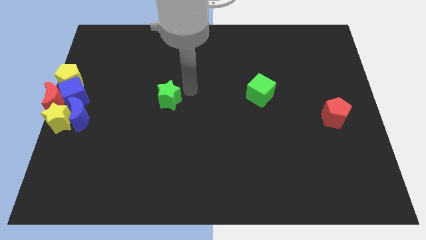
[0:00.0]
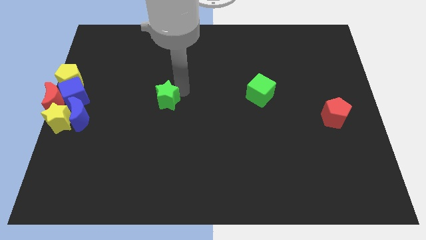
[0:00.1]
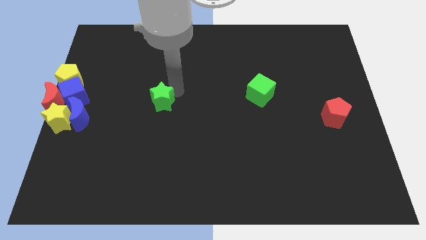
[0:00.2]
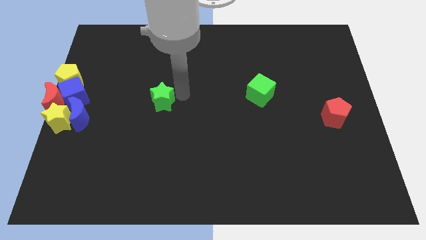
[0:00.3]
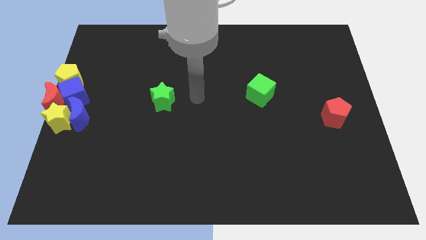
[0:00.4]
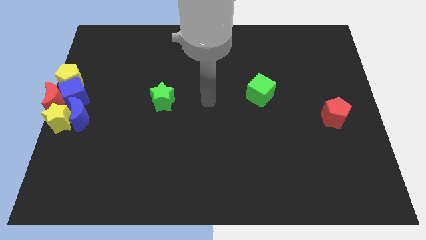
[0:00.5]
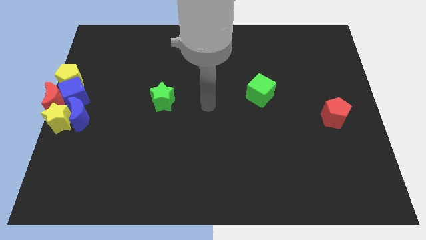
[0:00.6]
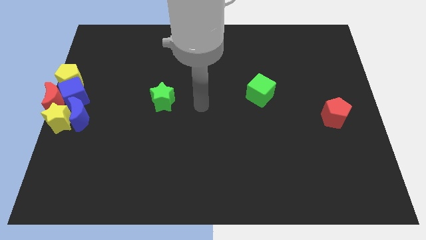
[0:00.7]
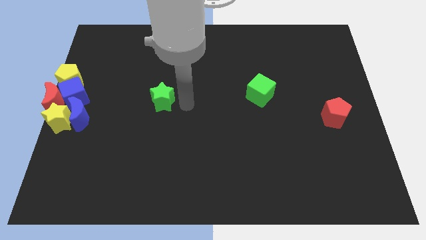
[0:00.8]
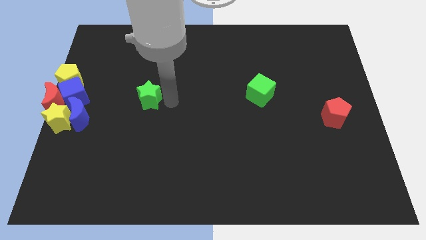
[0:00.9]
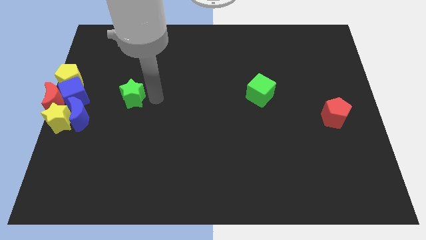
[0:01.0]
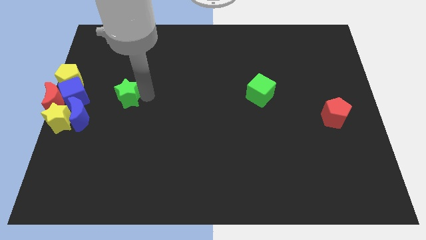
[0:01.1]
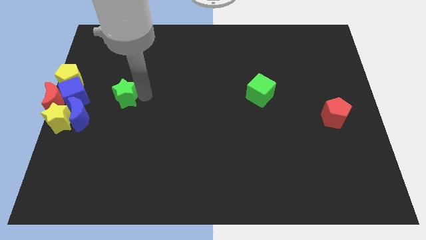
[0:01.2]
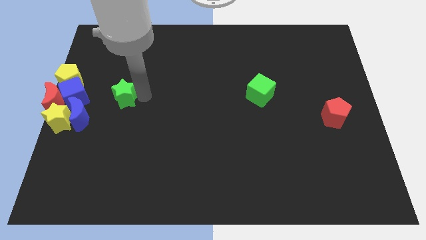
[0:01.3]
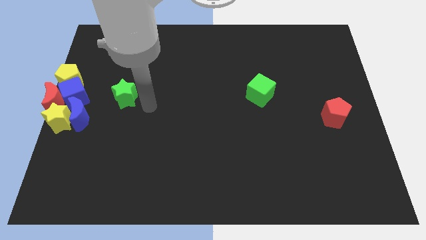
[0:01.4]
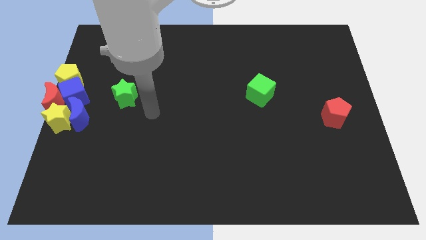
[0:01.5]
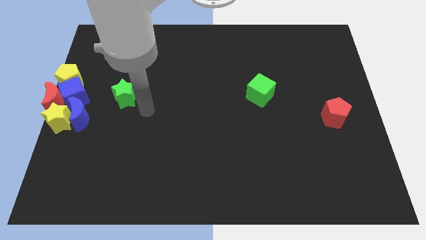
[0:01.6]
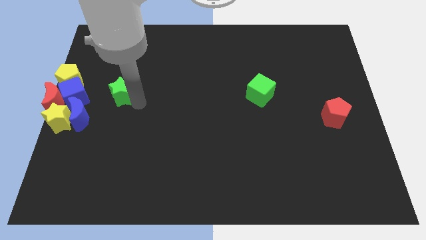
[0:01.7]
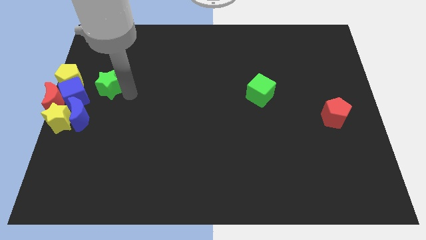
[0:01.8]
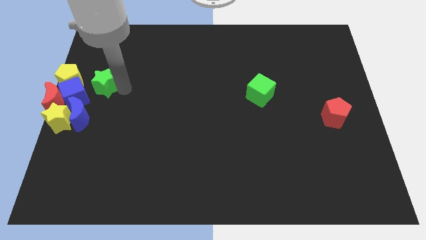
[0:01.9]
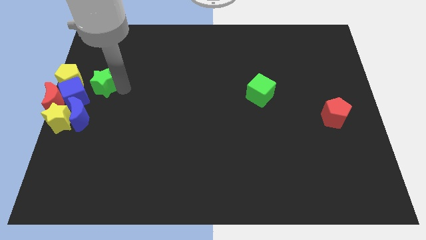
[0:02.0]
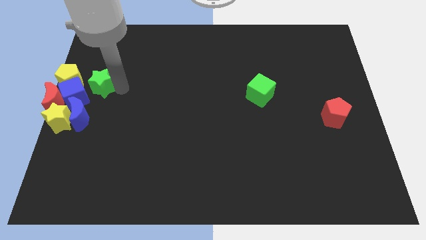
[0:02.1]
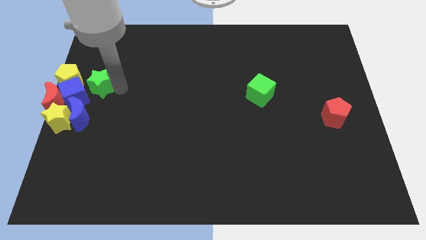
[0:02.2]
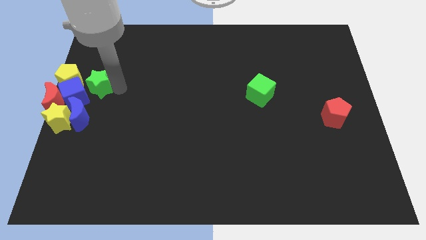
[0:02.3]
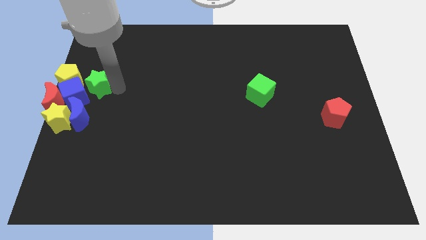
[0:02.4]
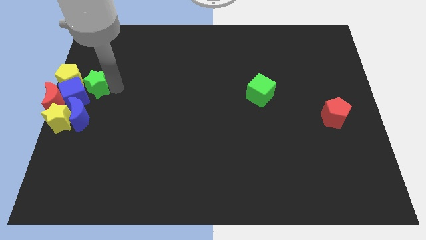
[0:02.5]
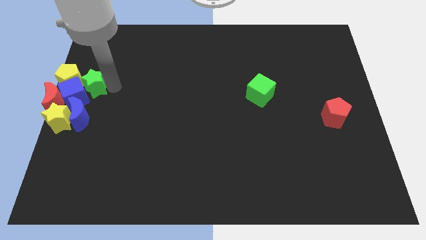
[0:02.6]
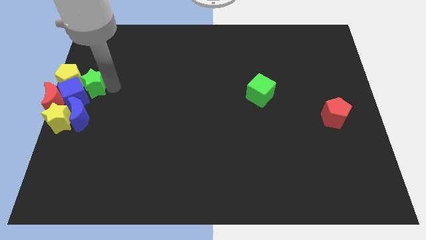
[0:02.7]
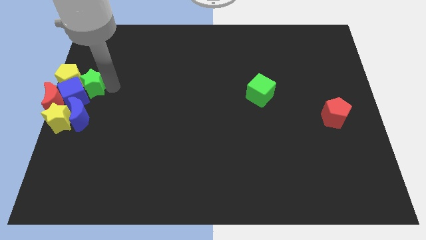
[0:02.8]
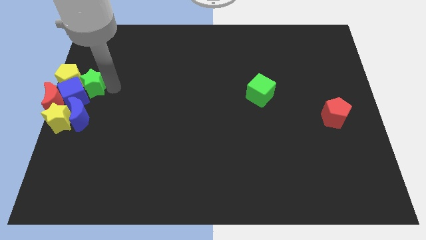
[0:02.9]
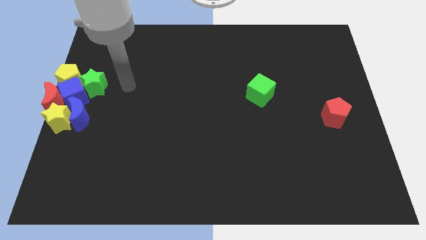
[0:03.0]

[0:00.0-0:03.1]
push the green star into the group of blocks

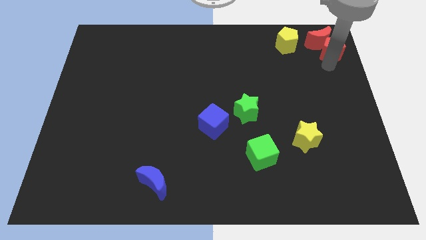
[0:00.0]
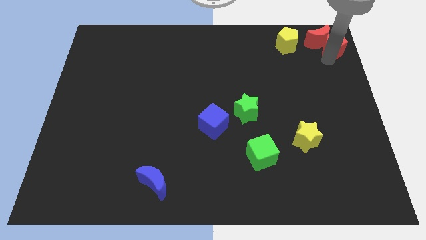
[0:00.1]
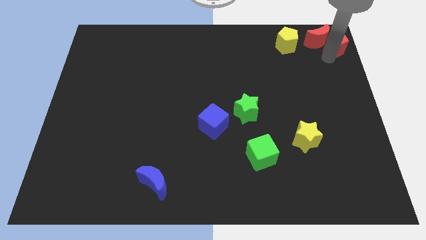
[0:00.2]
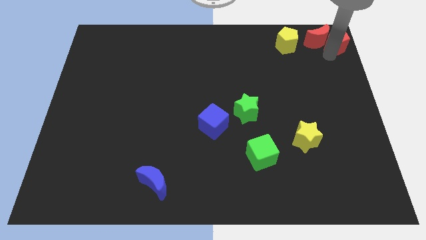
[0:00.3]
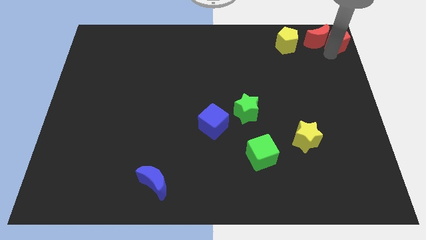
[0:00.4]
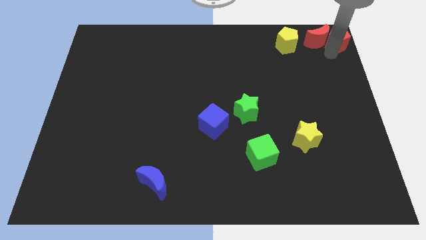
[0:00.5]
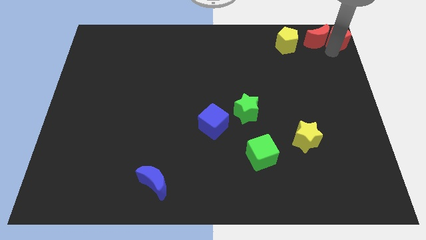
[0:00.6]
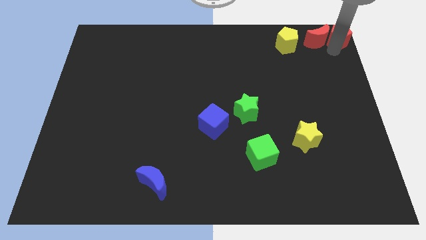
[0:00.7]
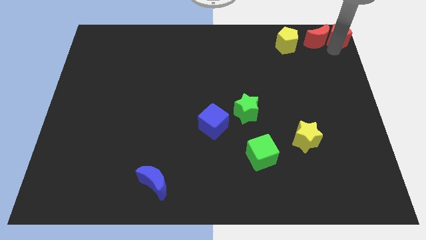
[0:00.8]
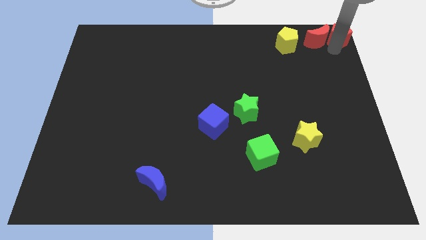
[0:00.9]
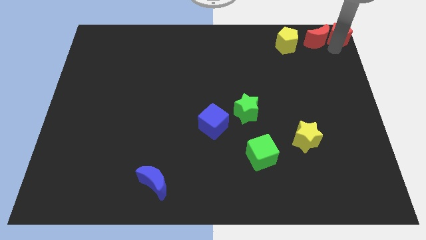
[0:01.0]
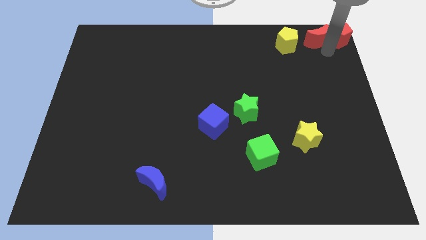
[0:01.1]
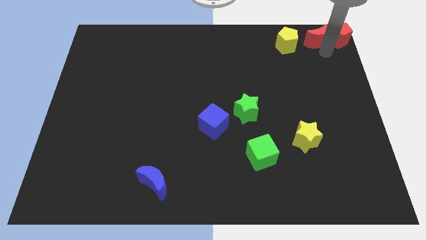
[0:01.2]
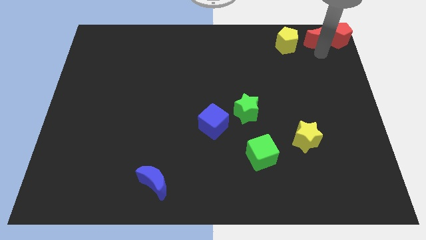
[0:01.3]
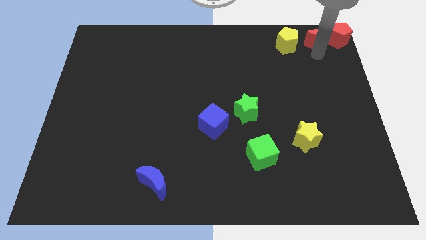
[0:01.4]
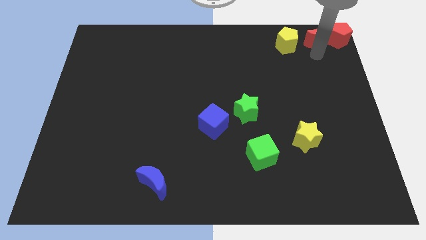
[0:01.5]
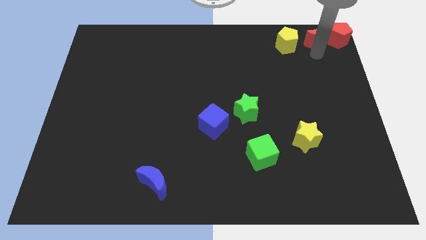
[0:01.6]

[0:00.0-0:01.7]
move the red pentagon to the top right corner of the bord

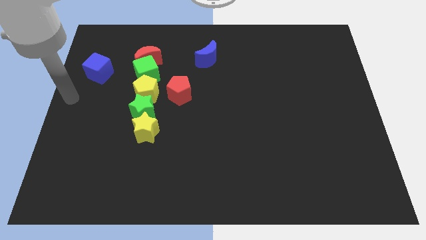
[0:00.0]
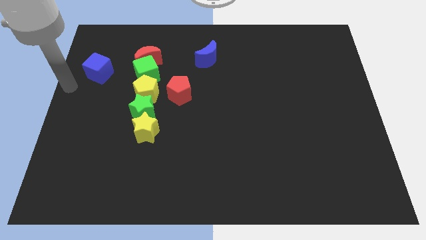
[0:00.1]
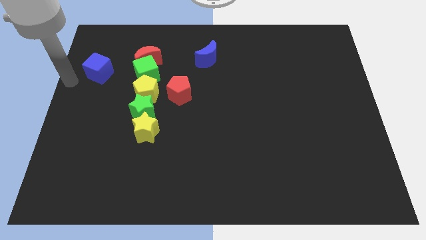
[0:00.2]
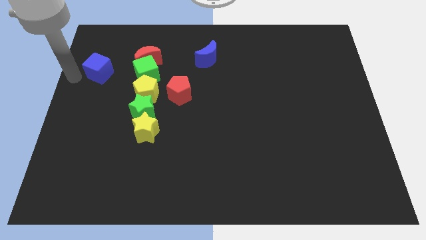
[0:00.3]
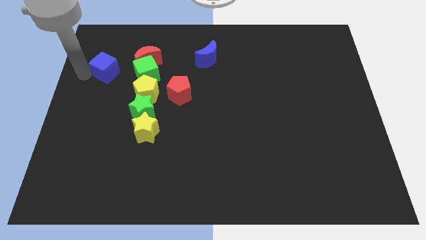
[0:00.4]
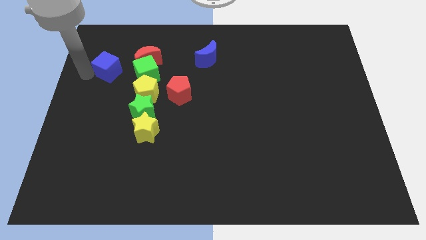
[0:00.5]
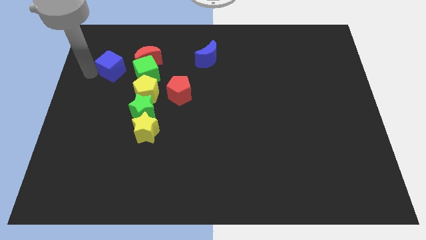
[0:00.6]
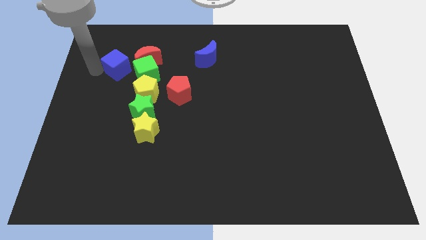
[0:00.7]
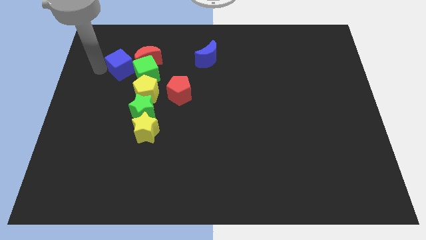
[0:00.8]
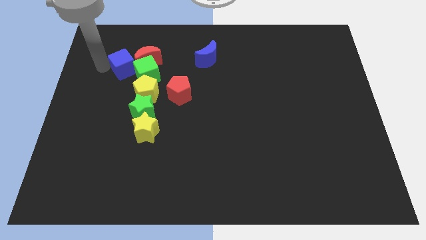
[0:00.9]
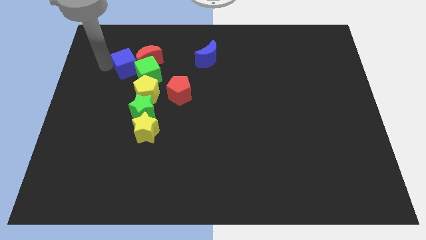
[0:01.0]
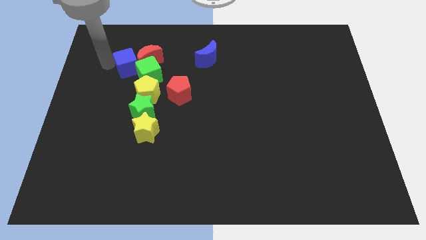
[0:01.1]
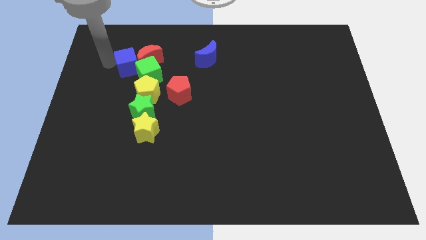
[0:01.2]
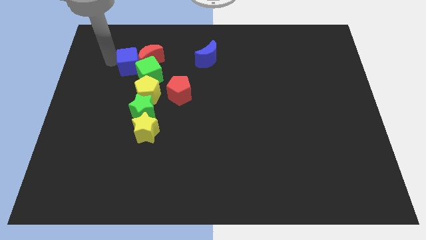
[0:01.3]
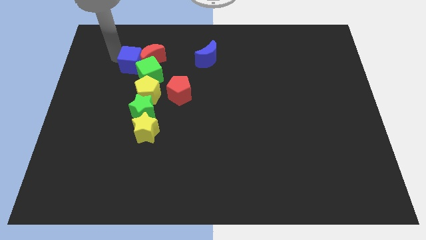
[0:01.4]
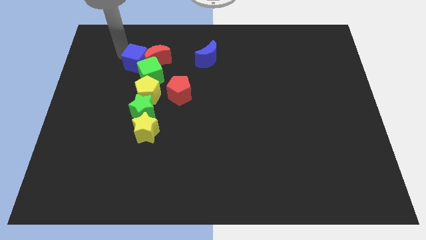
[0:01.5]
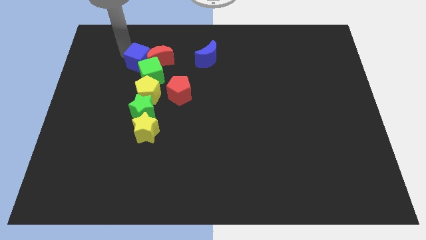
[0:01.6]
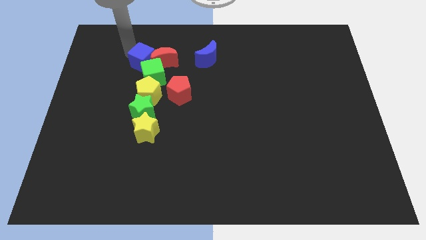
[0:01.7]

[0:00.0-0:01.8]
push the blue cube into the red crescent

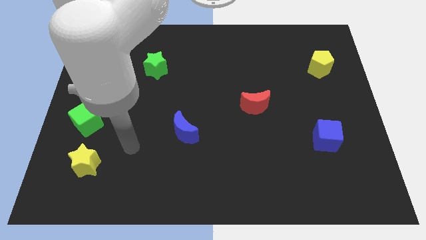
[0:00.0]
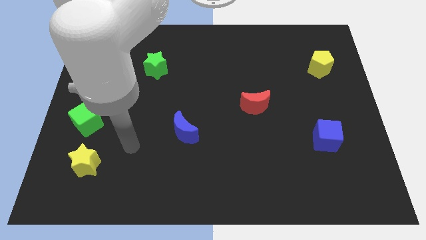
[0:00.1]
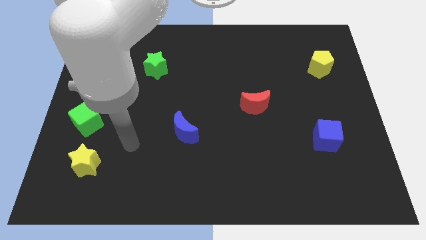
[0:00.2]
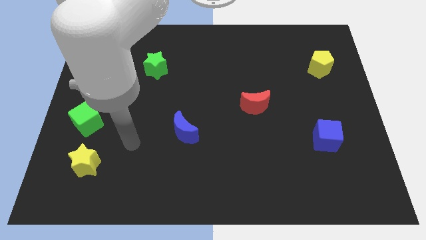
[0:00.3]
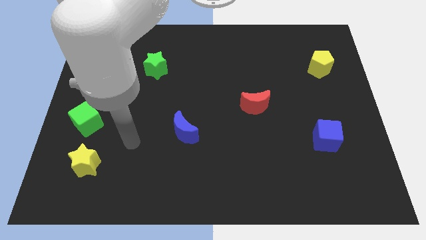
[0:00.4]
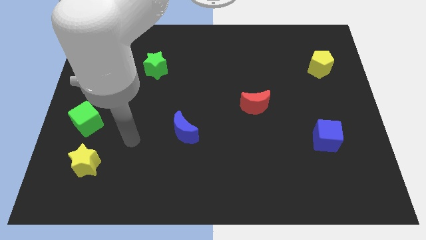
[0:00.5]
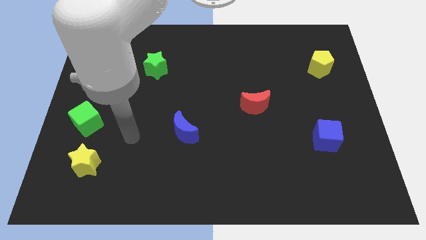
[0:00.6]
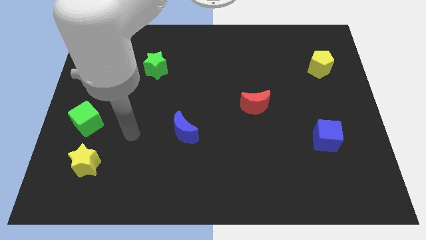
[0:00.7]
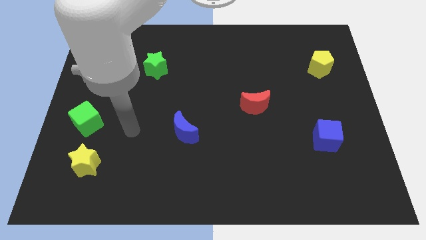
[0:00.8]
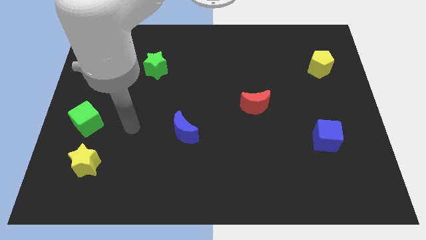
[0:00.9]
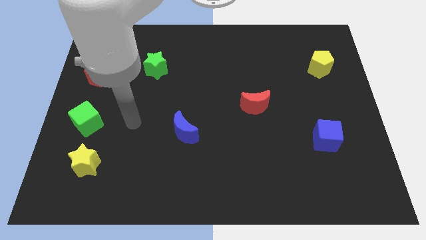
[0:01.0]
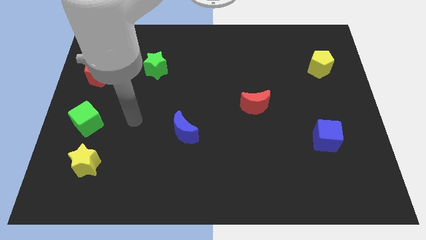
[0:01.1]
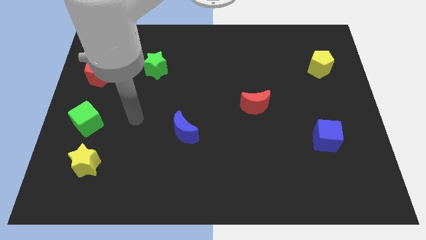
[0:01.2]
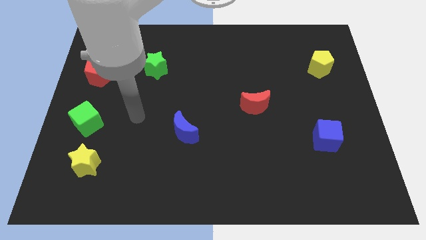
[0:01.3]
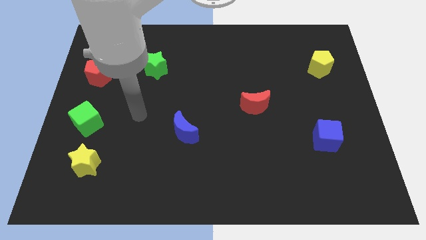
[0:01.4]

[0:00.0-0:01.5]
move your arm slightly towards up

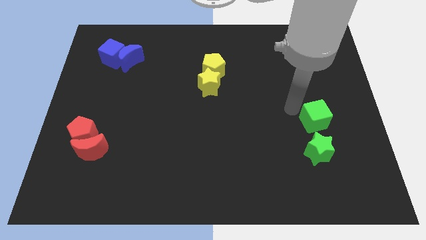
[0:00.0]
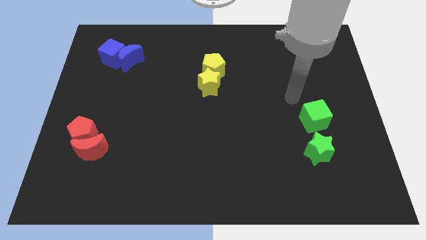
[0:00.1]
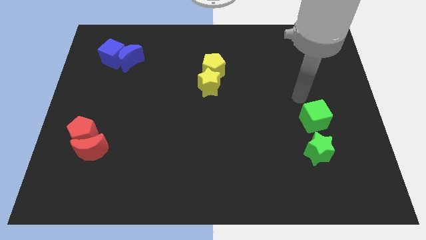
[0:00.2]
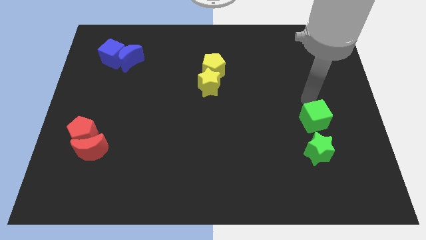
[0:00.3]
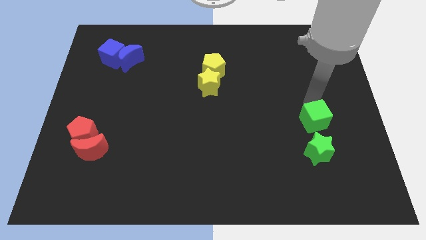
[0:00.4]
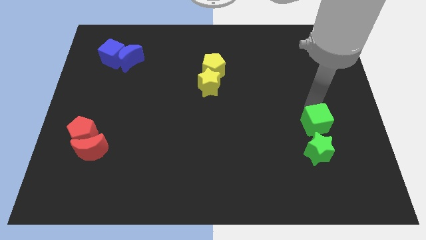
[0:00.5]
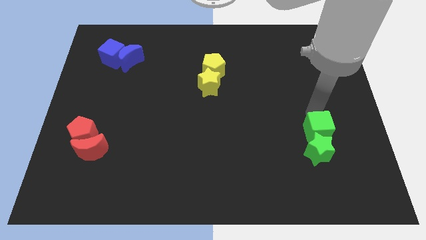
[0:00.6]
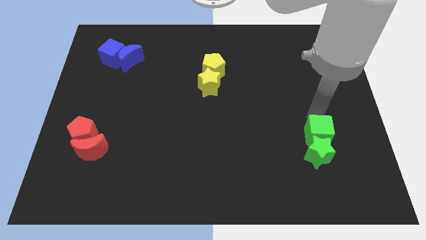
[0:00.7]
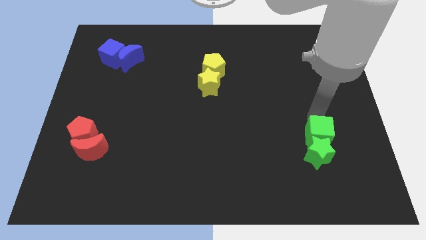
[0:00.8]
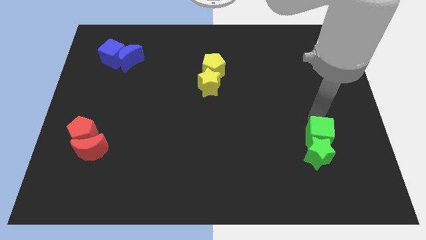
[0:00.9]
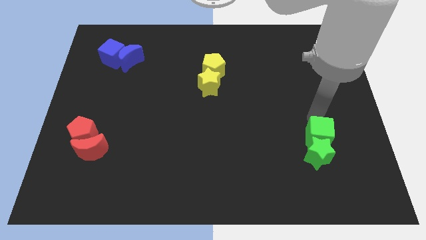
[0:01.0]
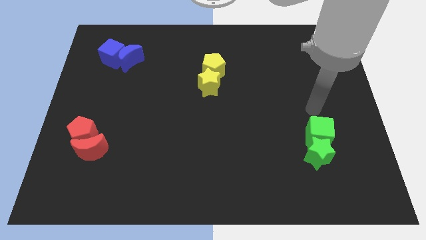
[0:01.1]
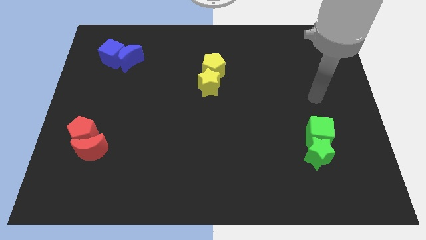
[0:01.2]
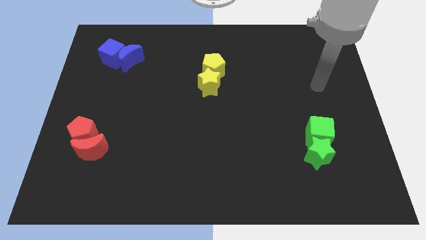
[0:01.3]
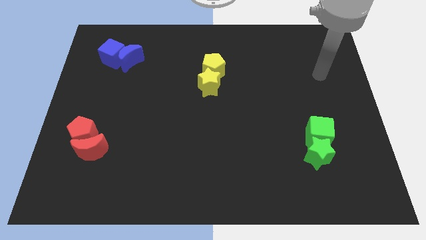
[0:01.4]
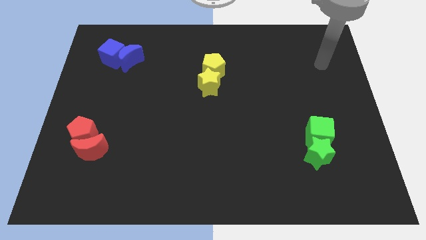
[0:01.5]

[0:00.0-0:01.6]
attach the green cube to the green star
